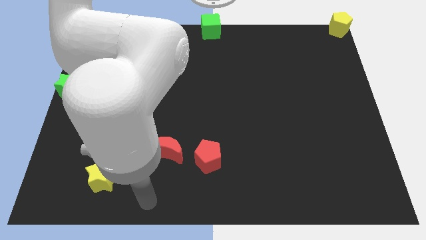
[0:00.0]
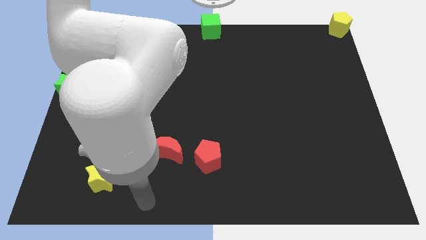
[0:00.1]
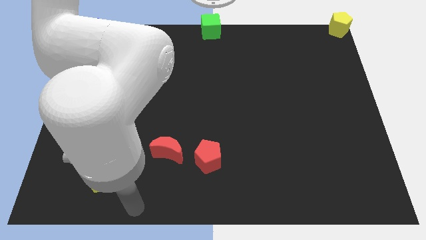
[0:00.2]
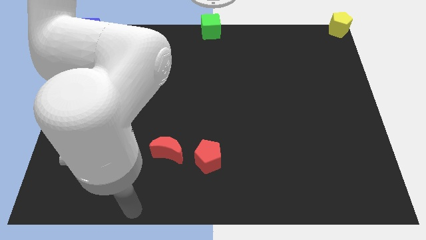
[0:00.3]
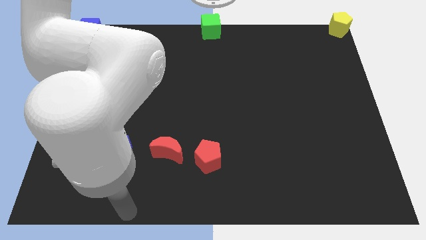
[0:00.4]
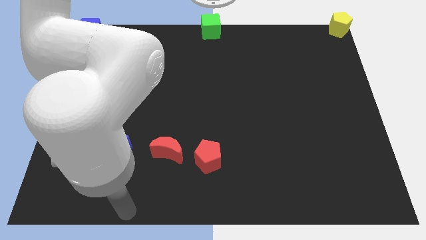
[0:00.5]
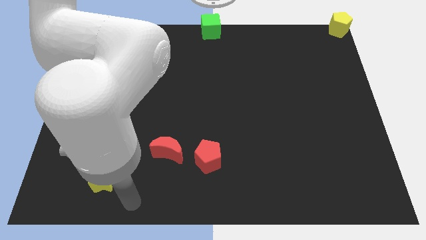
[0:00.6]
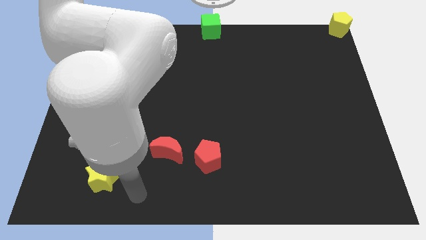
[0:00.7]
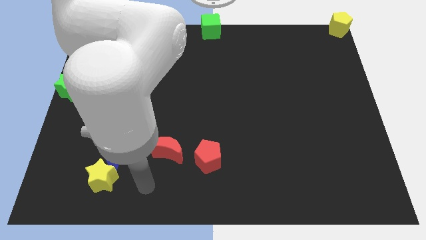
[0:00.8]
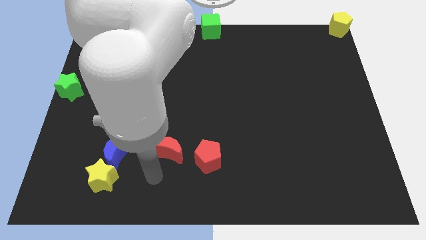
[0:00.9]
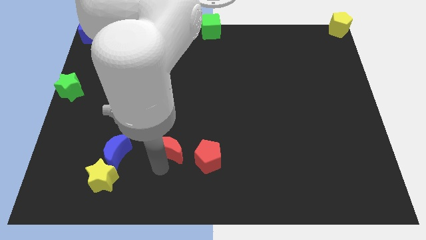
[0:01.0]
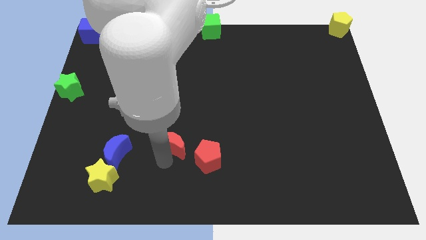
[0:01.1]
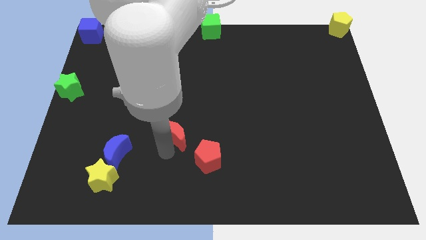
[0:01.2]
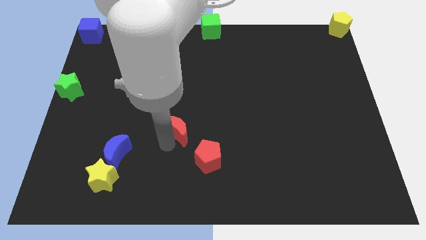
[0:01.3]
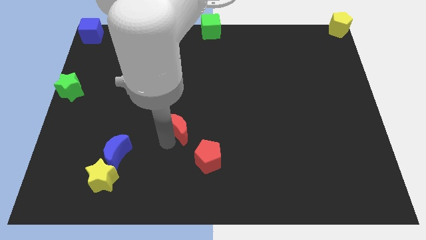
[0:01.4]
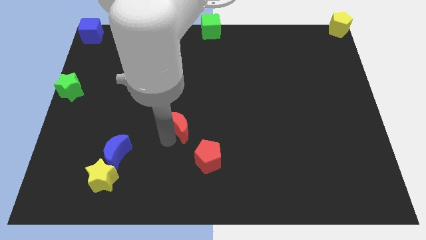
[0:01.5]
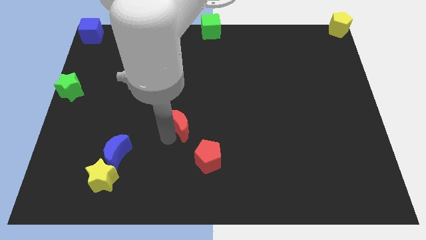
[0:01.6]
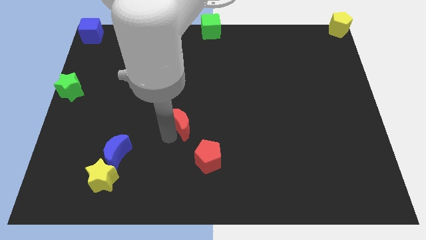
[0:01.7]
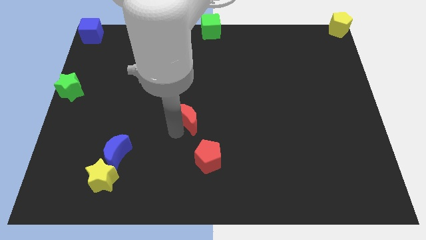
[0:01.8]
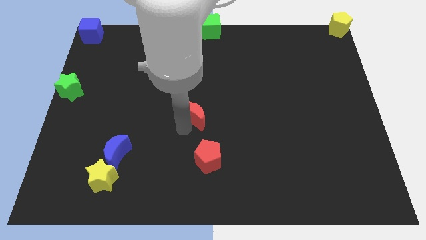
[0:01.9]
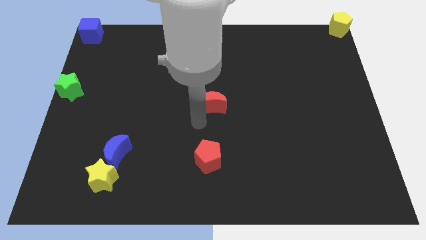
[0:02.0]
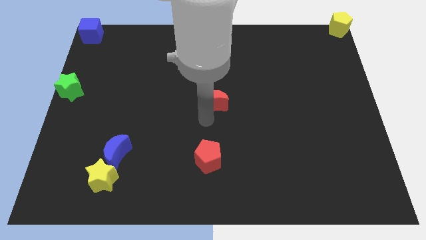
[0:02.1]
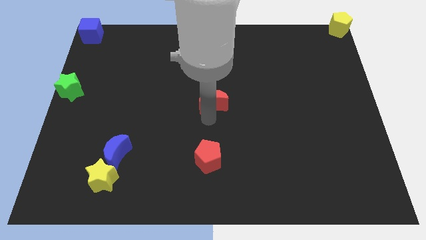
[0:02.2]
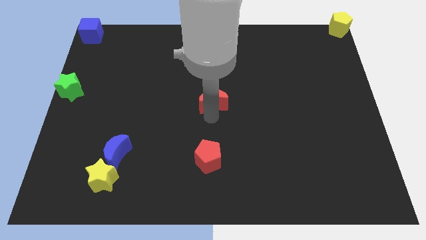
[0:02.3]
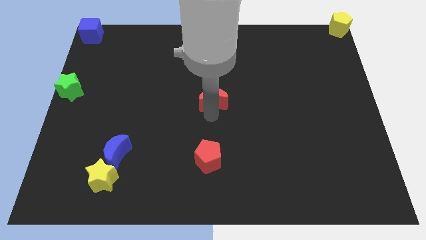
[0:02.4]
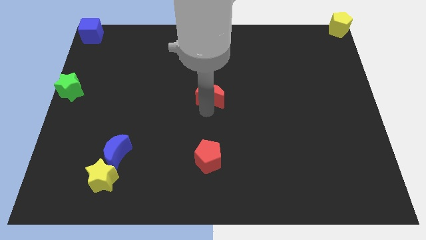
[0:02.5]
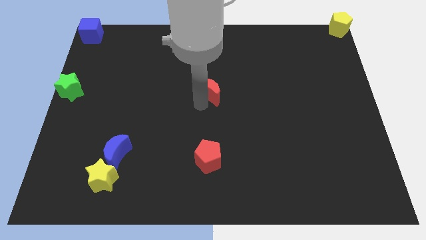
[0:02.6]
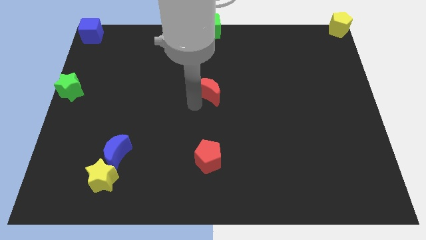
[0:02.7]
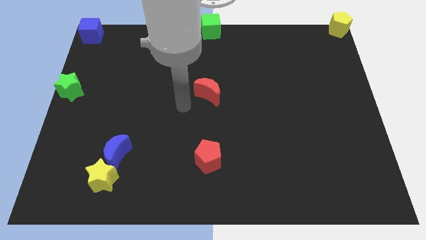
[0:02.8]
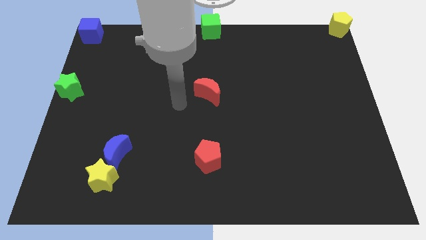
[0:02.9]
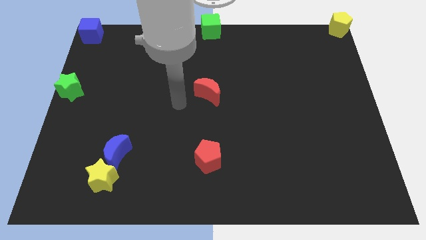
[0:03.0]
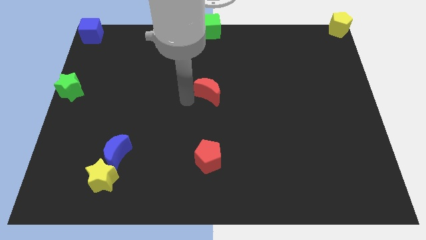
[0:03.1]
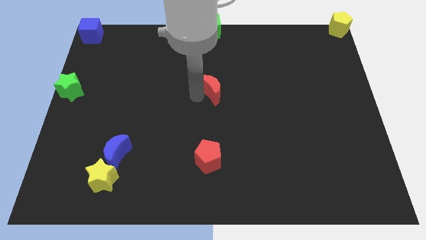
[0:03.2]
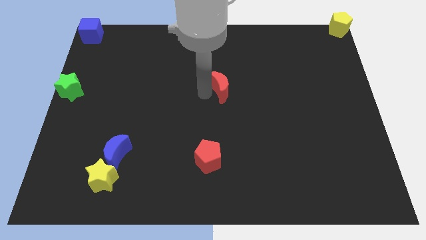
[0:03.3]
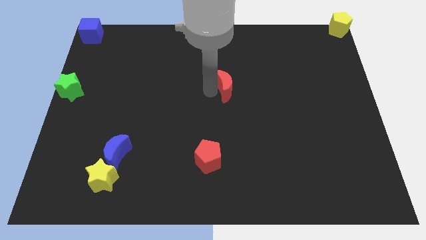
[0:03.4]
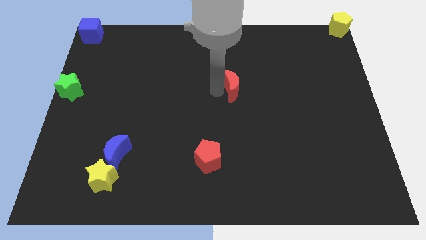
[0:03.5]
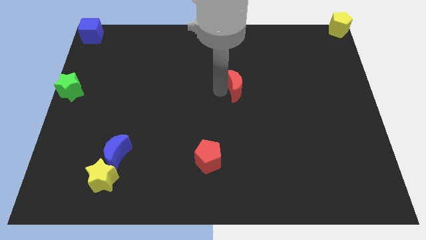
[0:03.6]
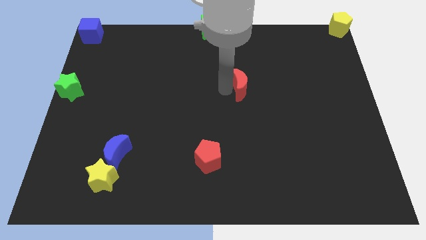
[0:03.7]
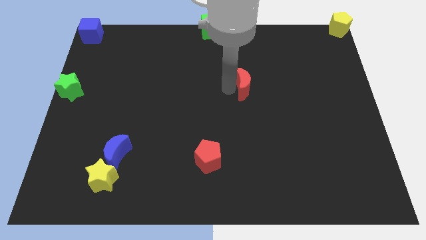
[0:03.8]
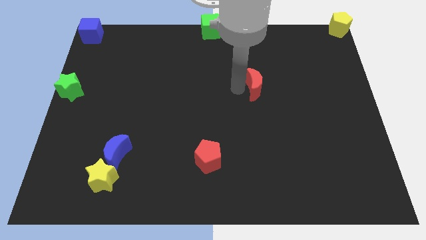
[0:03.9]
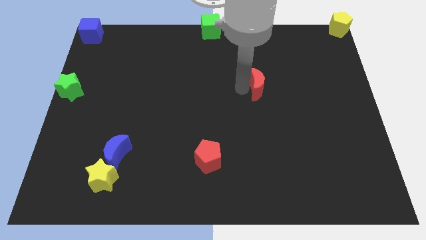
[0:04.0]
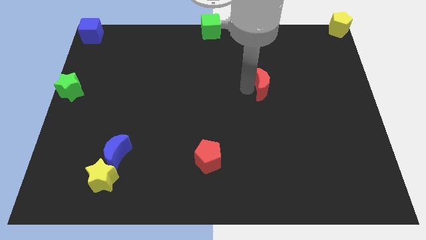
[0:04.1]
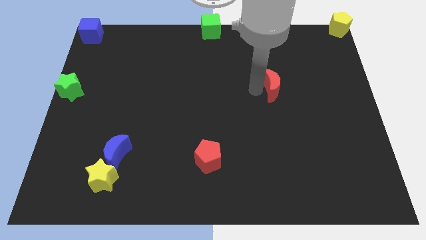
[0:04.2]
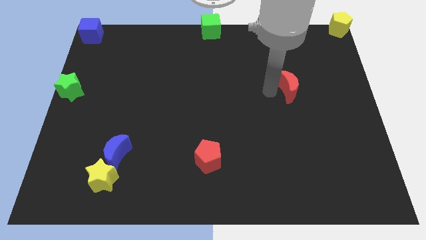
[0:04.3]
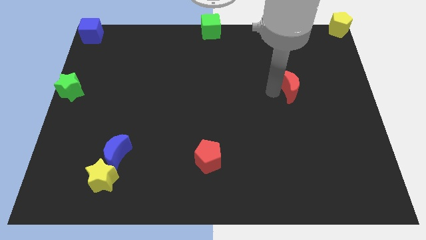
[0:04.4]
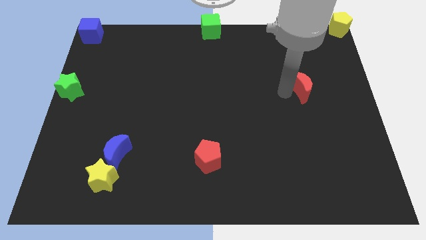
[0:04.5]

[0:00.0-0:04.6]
push the red moon diagonally to the right side of the board

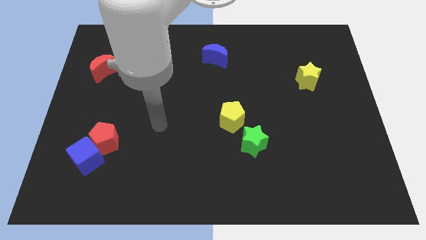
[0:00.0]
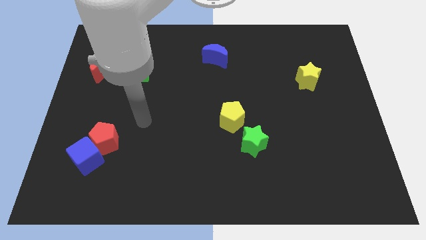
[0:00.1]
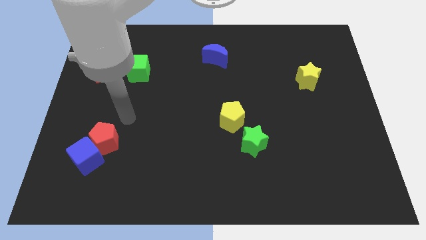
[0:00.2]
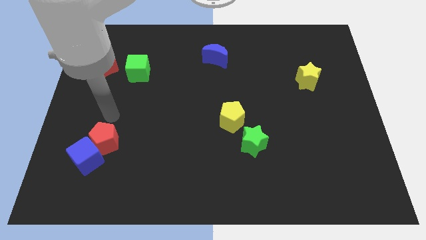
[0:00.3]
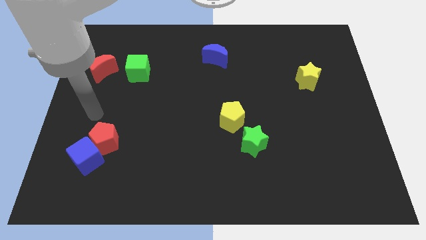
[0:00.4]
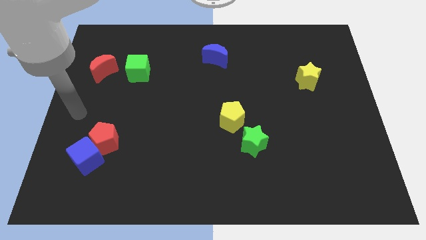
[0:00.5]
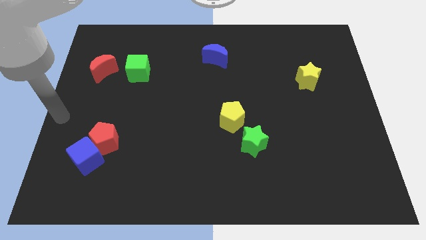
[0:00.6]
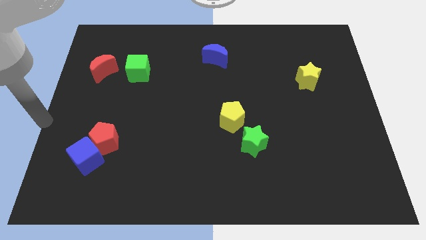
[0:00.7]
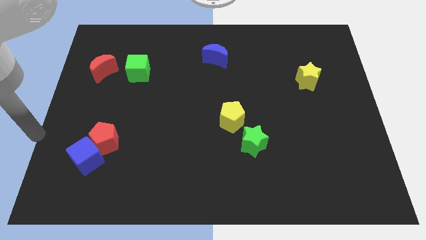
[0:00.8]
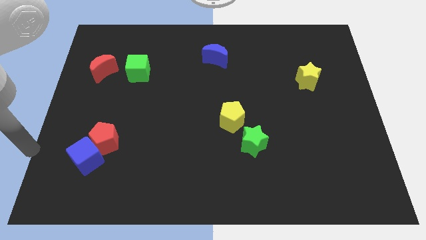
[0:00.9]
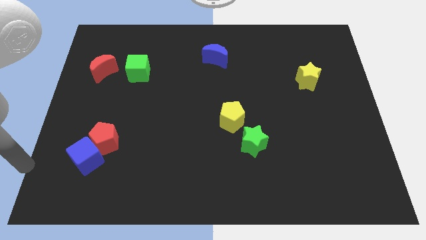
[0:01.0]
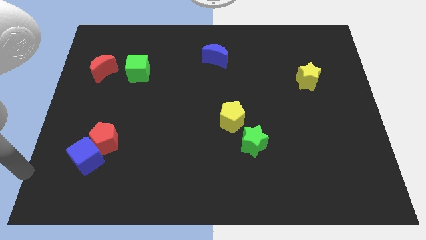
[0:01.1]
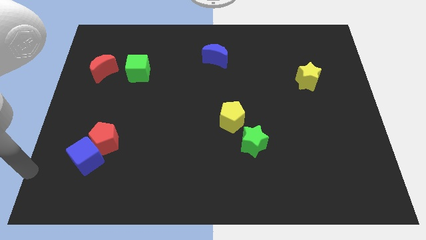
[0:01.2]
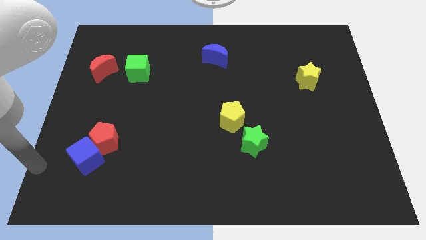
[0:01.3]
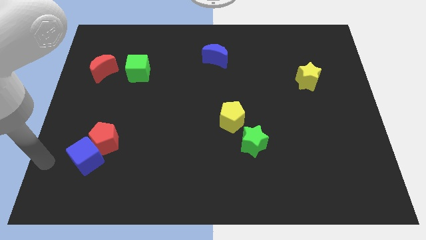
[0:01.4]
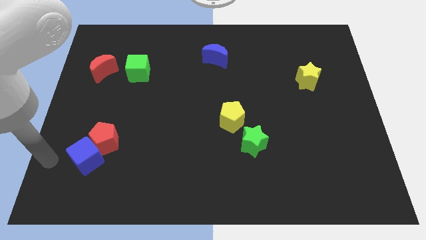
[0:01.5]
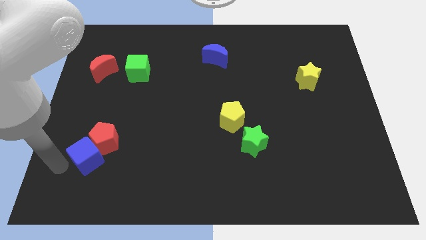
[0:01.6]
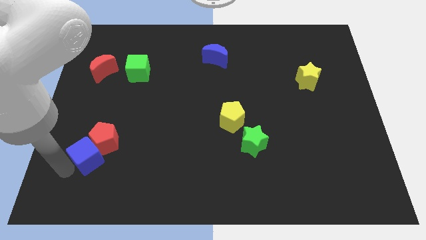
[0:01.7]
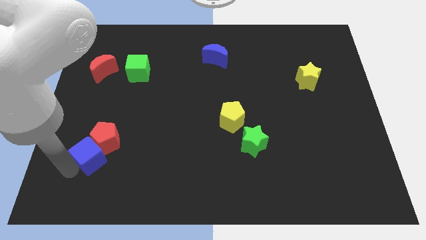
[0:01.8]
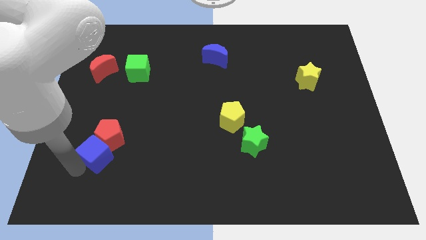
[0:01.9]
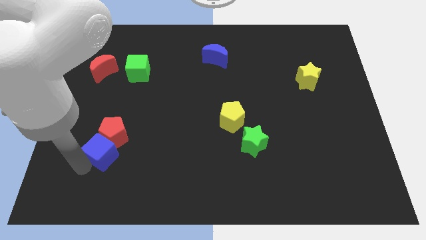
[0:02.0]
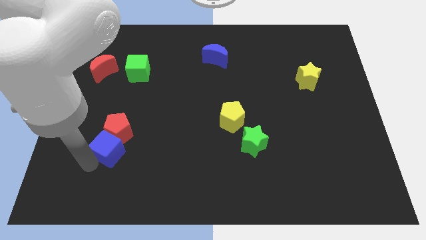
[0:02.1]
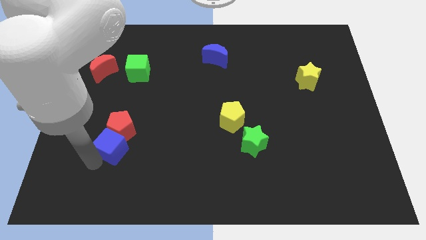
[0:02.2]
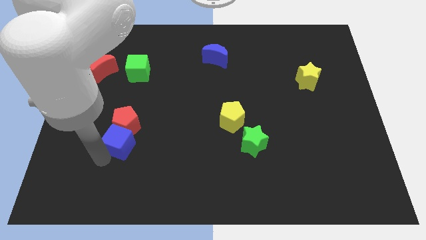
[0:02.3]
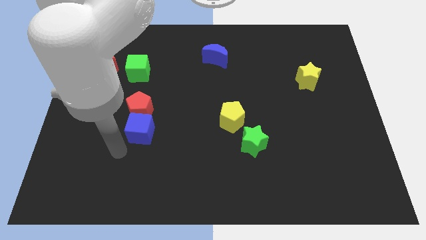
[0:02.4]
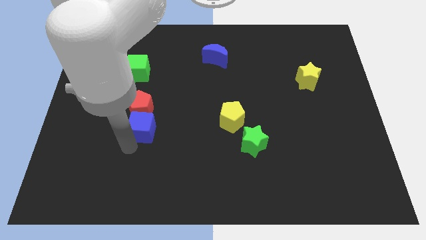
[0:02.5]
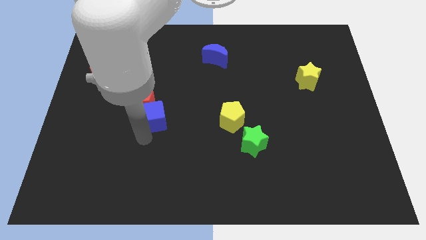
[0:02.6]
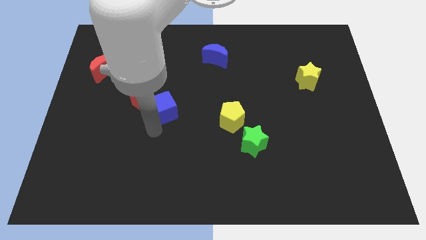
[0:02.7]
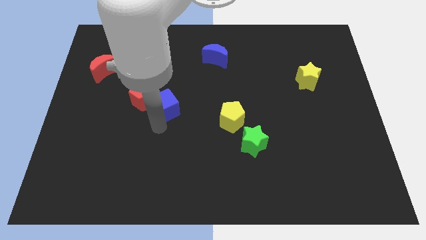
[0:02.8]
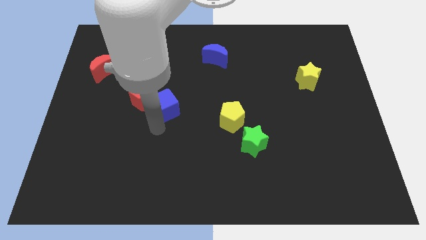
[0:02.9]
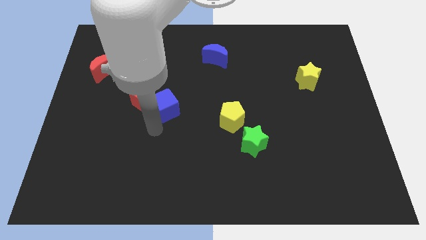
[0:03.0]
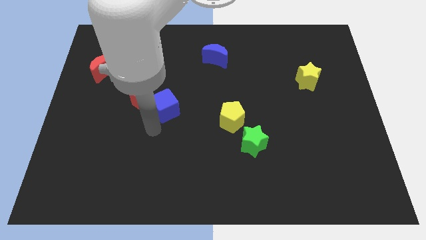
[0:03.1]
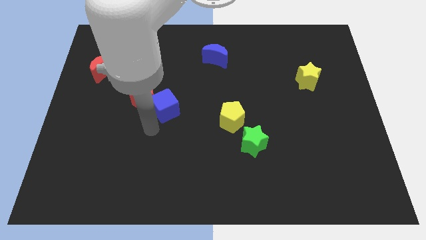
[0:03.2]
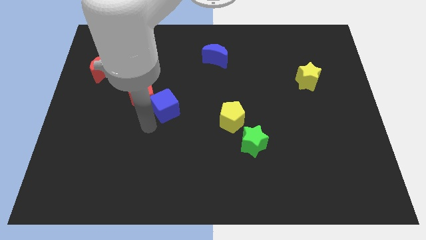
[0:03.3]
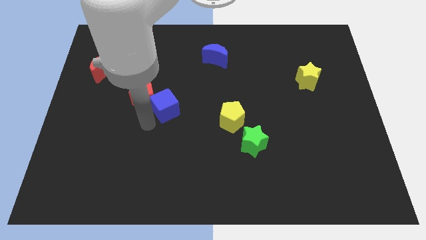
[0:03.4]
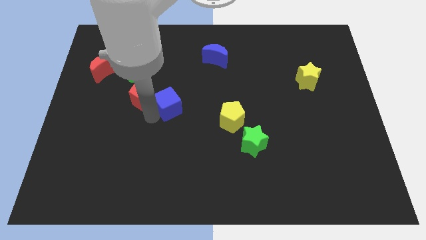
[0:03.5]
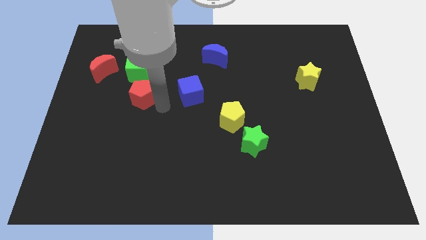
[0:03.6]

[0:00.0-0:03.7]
move the blue cube to the right of the red pentagon

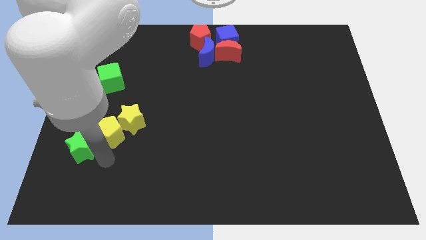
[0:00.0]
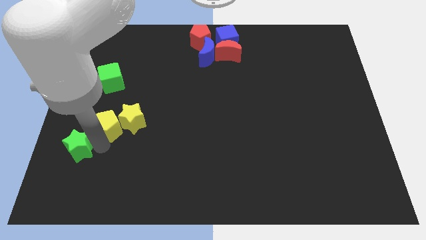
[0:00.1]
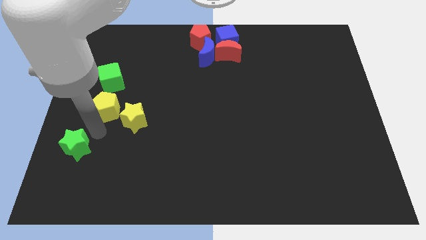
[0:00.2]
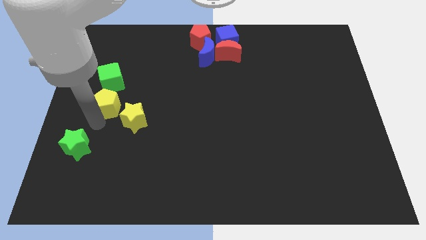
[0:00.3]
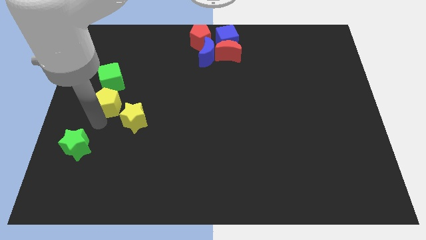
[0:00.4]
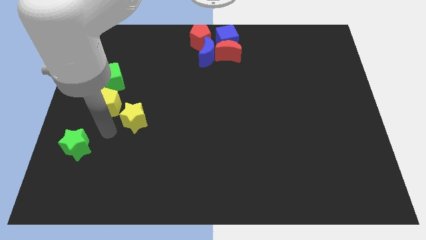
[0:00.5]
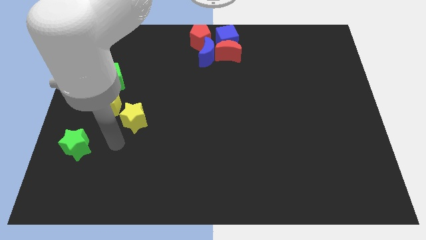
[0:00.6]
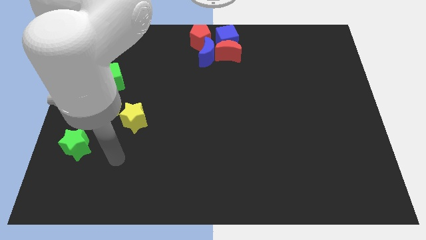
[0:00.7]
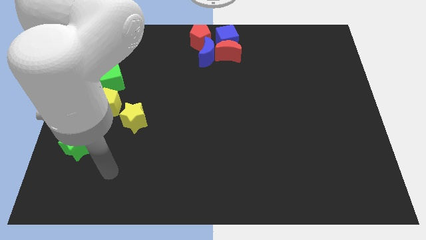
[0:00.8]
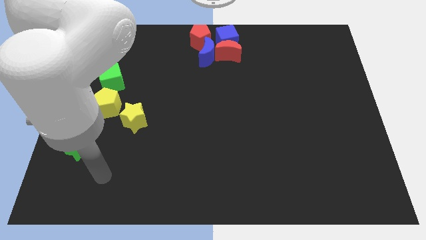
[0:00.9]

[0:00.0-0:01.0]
separate green star and yellow pentagon
